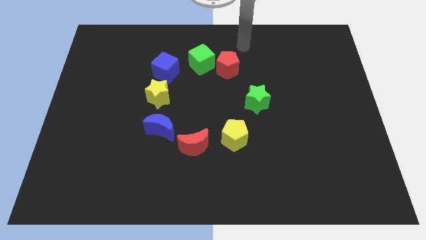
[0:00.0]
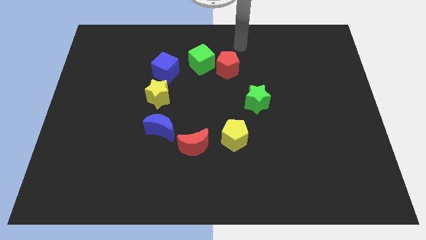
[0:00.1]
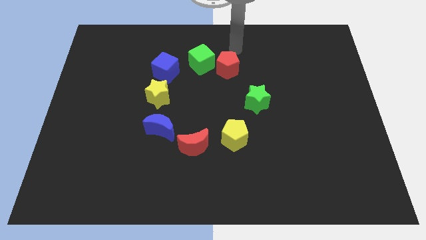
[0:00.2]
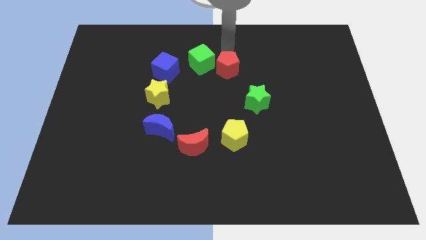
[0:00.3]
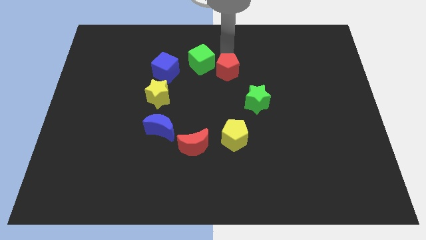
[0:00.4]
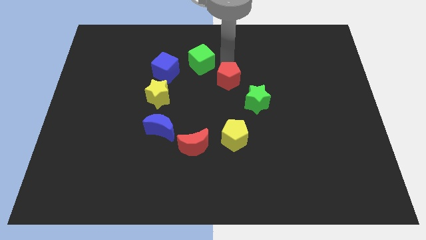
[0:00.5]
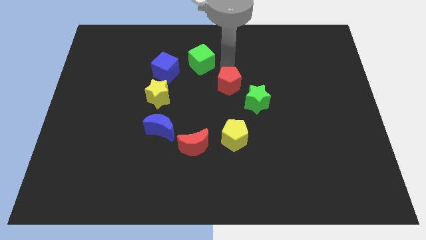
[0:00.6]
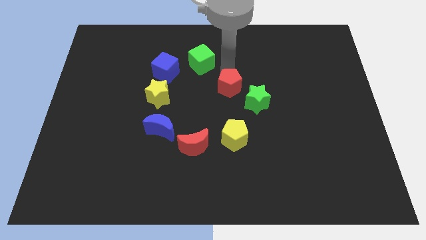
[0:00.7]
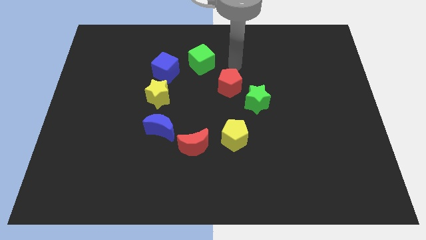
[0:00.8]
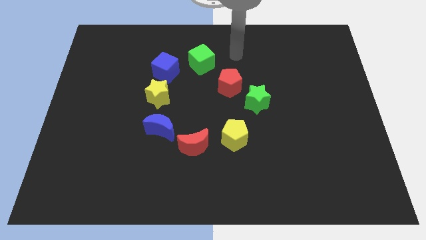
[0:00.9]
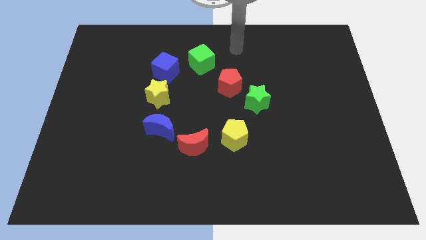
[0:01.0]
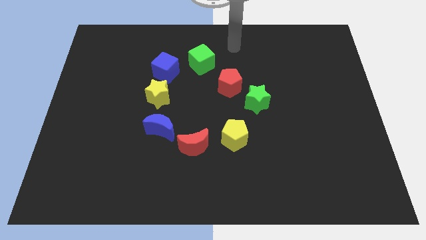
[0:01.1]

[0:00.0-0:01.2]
move the red pentagon towards the top left of the green star

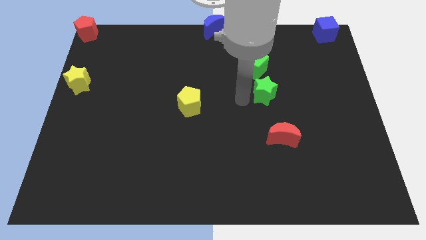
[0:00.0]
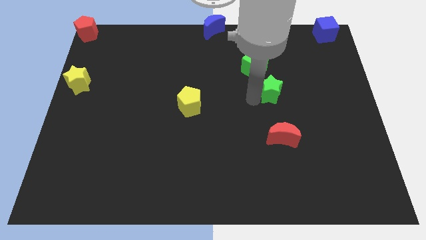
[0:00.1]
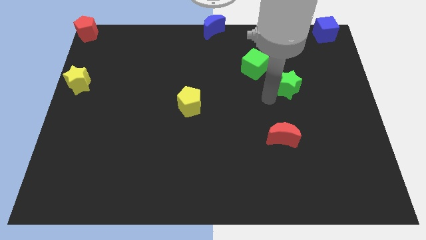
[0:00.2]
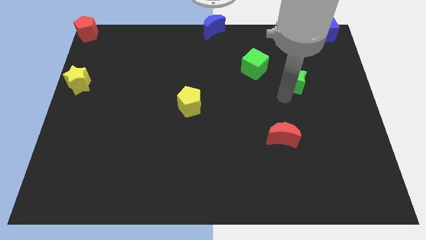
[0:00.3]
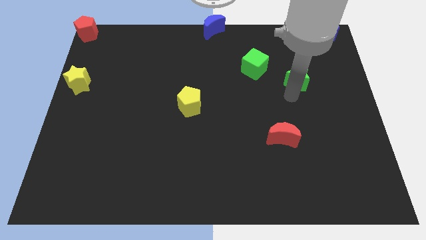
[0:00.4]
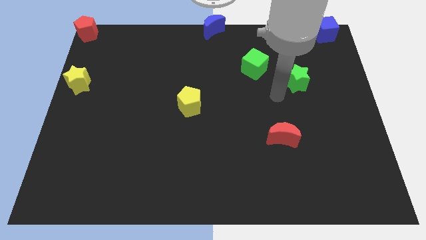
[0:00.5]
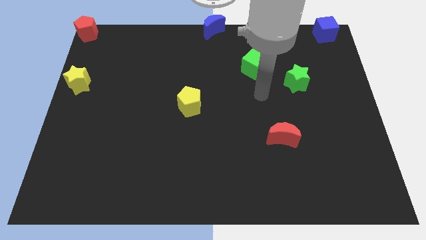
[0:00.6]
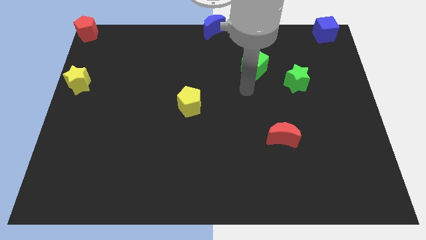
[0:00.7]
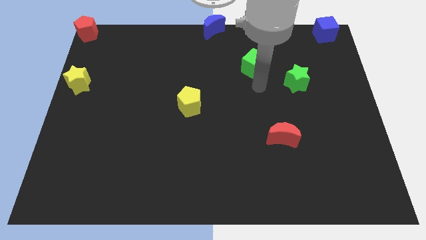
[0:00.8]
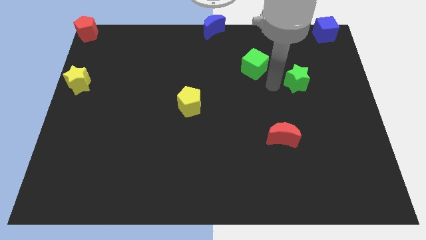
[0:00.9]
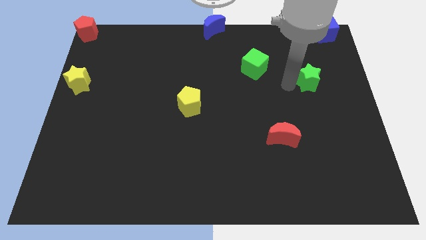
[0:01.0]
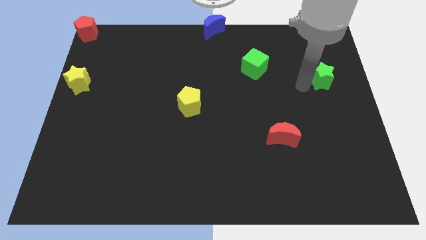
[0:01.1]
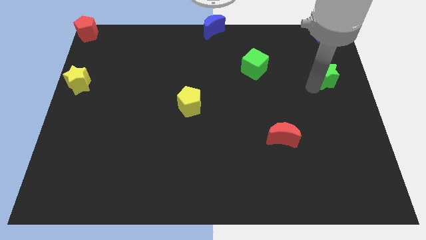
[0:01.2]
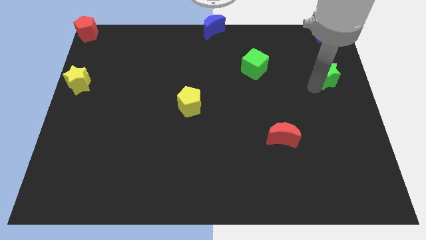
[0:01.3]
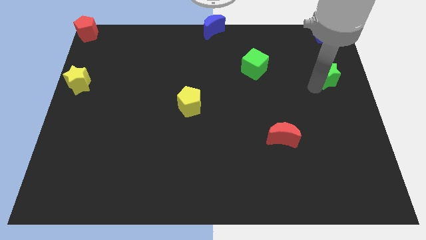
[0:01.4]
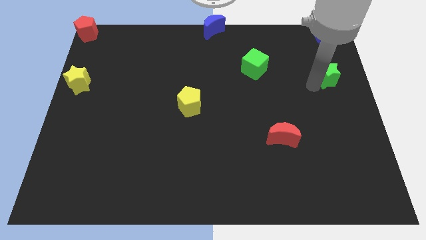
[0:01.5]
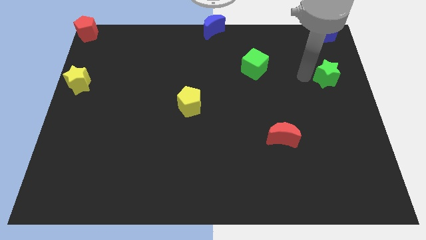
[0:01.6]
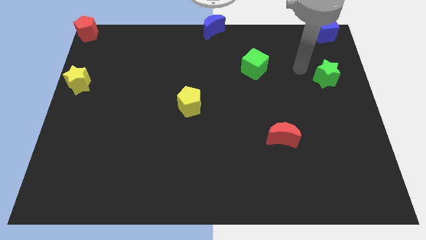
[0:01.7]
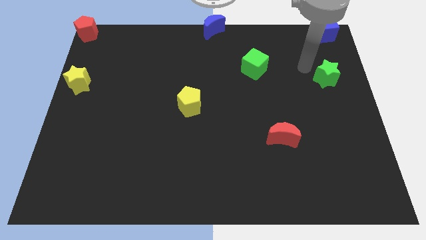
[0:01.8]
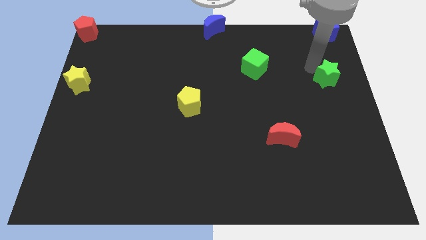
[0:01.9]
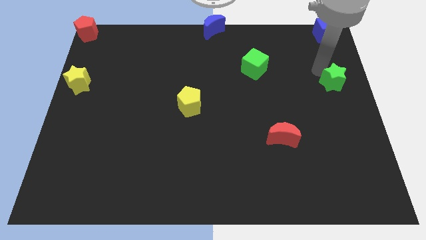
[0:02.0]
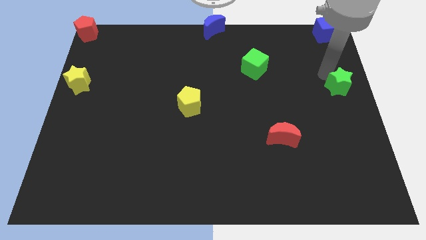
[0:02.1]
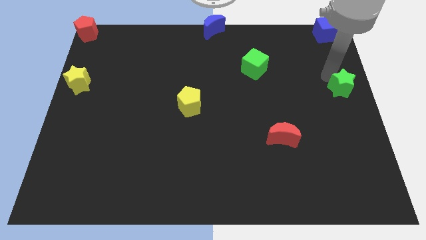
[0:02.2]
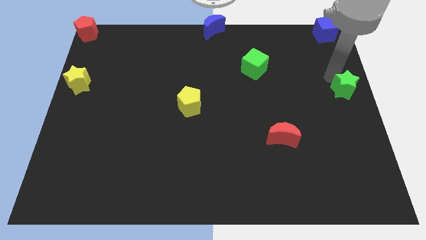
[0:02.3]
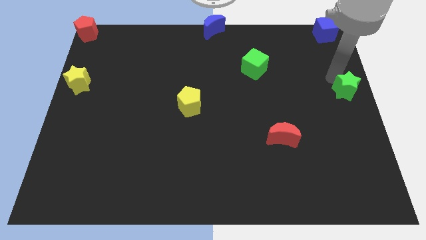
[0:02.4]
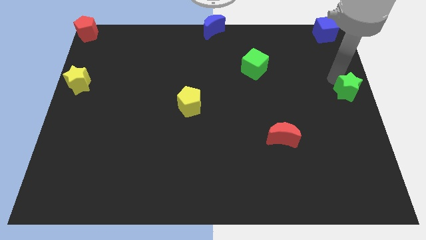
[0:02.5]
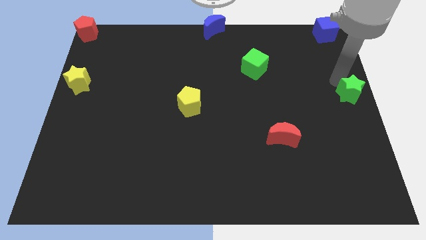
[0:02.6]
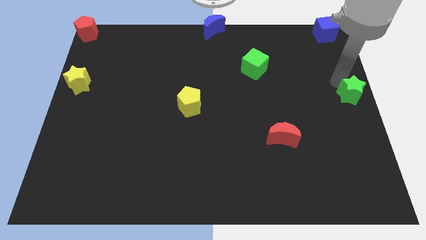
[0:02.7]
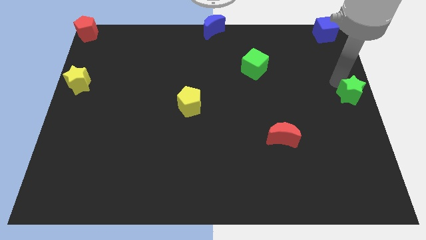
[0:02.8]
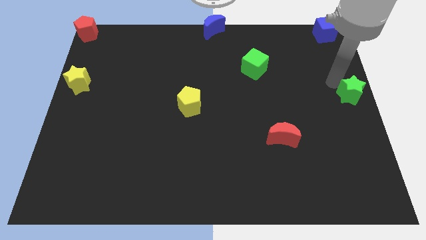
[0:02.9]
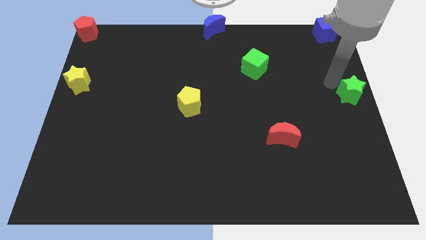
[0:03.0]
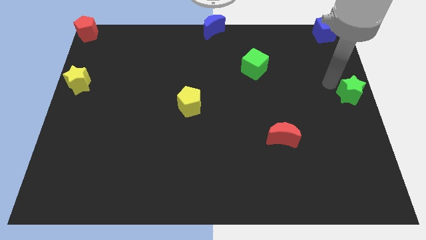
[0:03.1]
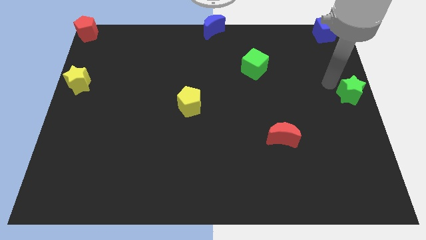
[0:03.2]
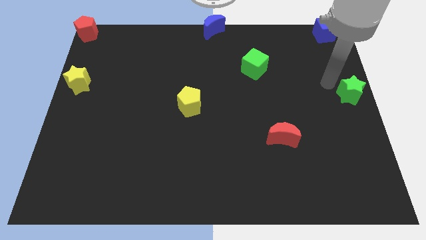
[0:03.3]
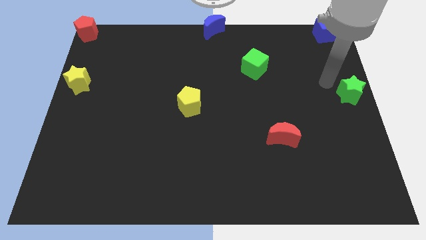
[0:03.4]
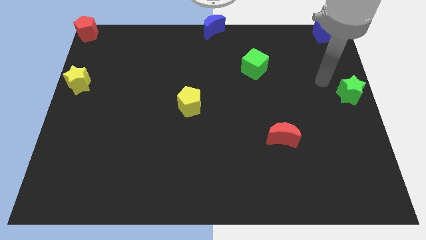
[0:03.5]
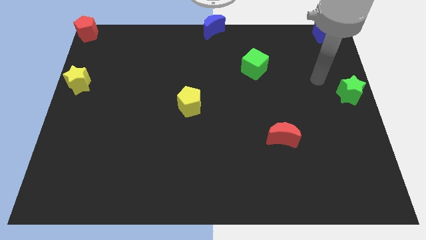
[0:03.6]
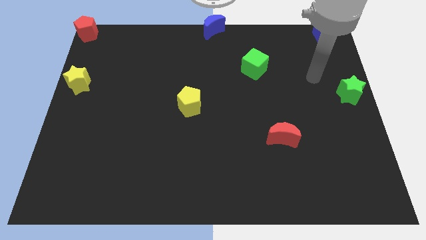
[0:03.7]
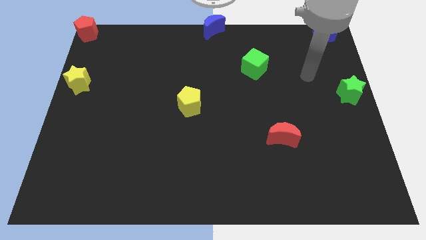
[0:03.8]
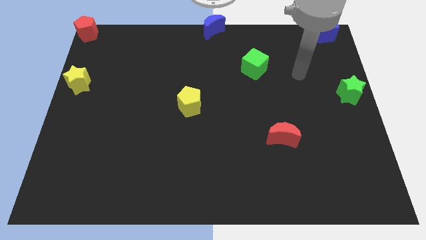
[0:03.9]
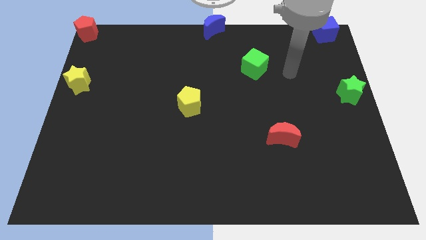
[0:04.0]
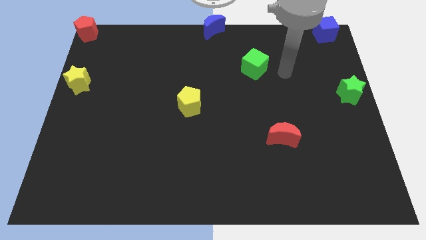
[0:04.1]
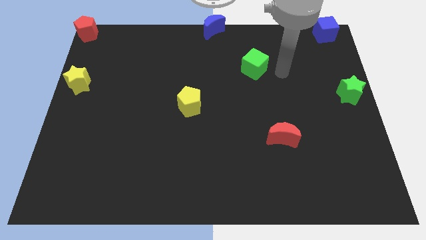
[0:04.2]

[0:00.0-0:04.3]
place the green star vertically below the blue cube

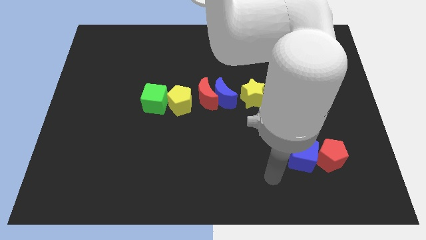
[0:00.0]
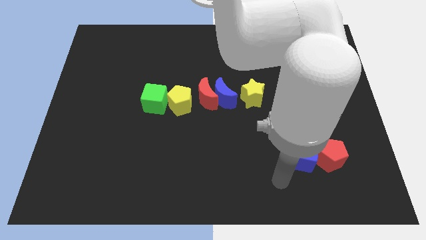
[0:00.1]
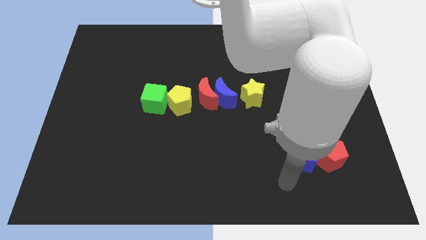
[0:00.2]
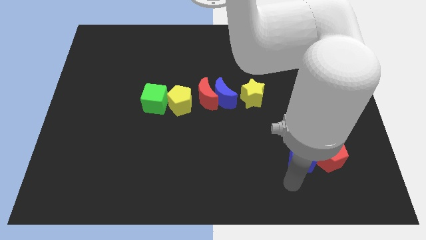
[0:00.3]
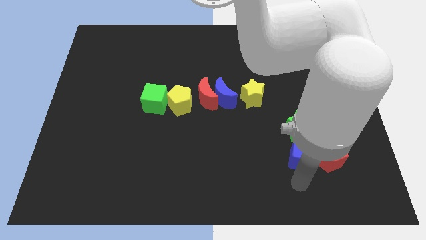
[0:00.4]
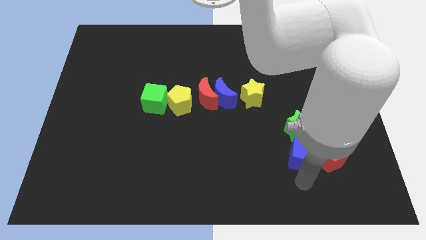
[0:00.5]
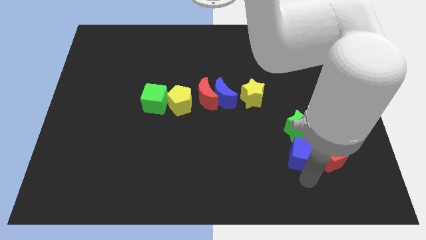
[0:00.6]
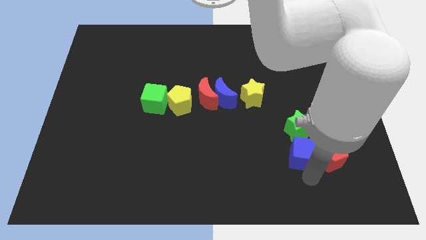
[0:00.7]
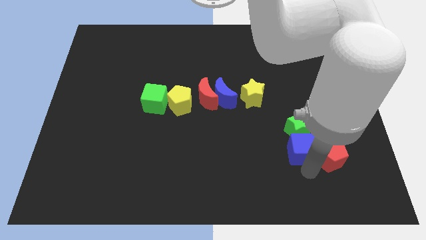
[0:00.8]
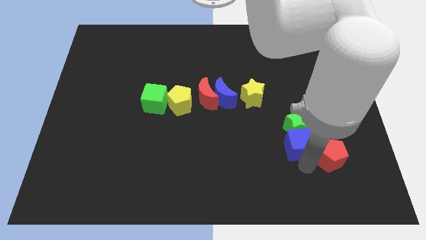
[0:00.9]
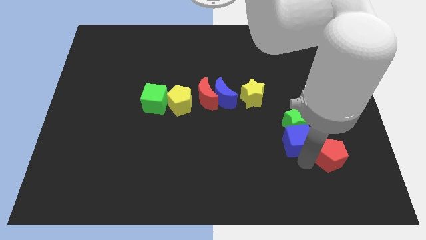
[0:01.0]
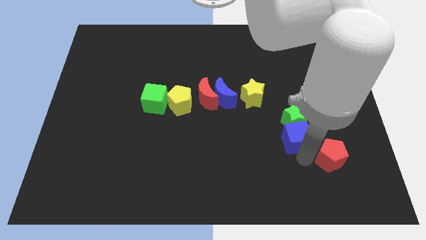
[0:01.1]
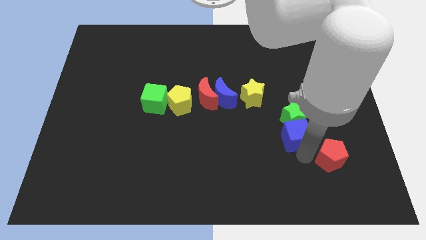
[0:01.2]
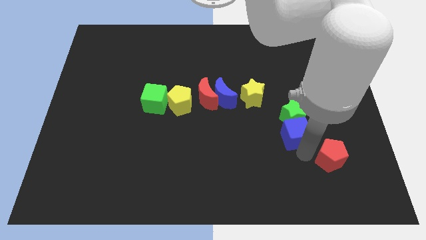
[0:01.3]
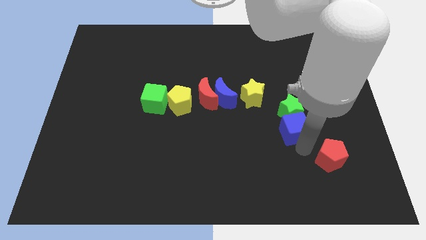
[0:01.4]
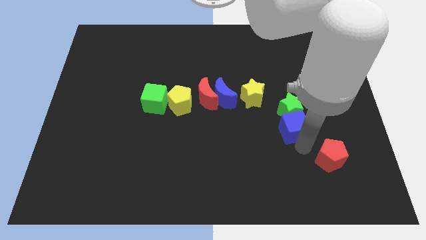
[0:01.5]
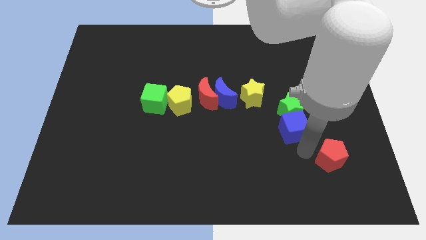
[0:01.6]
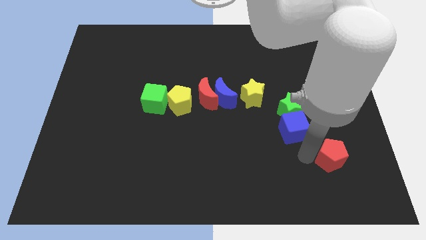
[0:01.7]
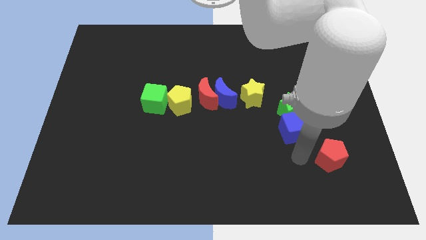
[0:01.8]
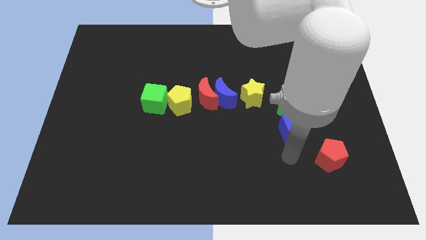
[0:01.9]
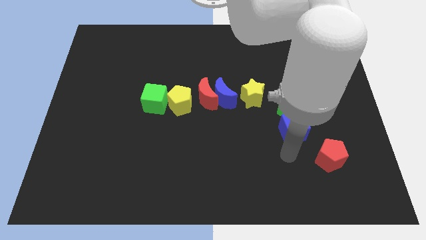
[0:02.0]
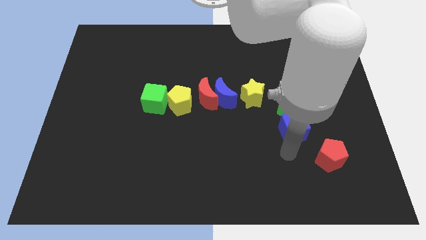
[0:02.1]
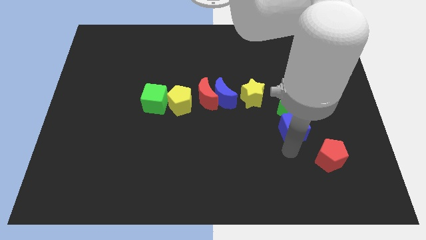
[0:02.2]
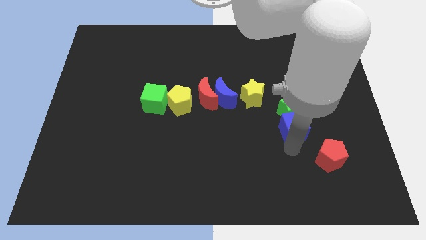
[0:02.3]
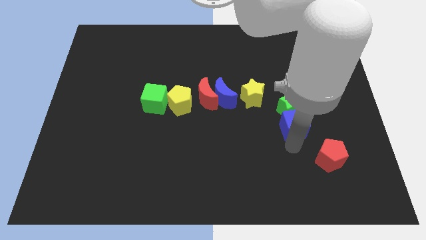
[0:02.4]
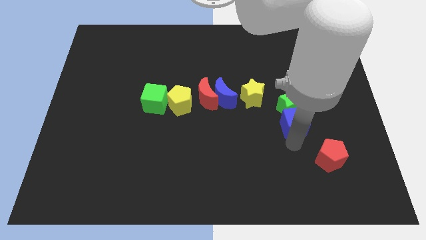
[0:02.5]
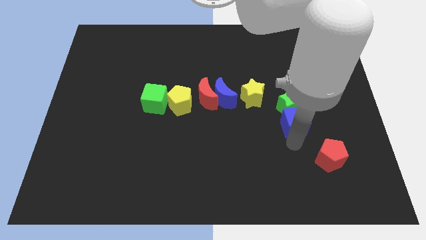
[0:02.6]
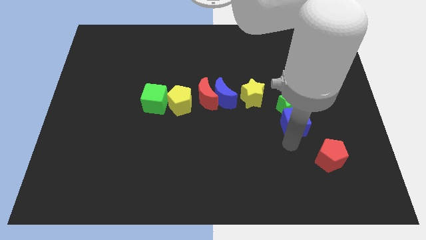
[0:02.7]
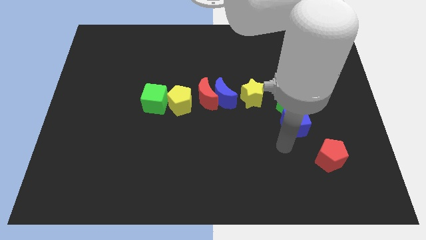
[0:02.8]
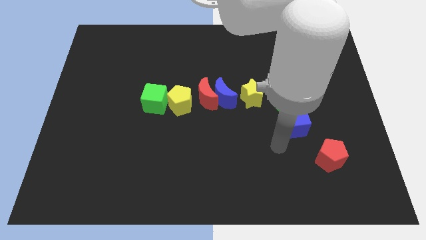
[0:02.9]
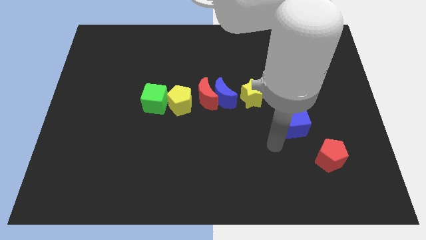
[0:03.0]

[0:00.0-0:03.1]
push blue cube and green star towards top

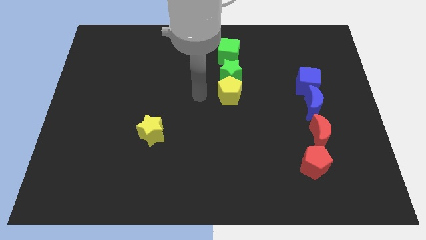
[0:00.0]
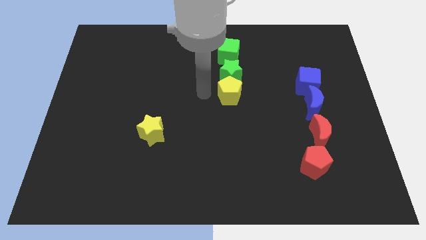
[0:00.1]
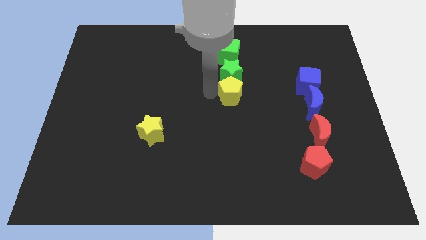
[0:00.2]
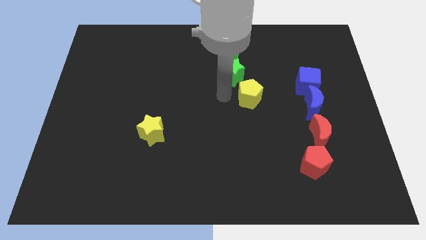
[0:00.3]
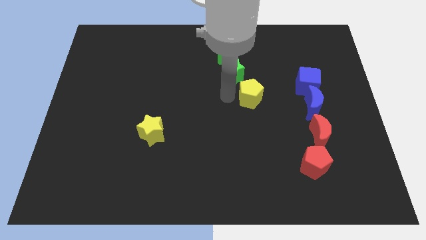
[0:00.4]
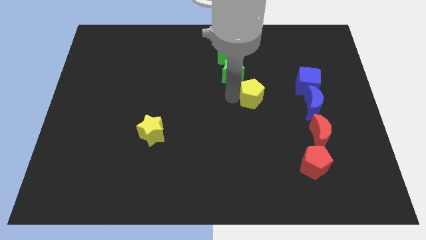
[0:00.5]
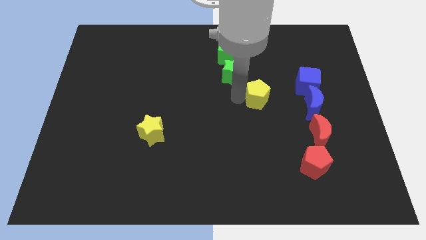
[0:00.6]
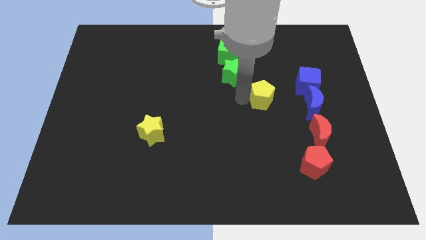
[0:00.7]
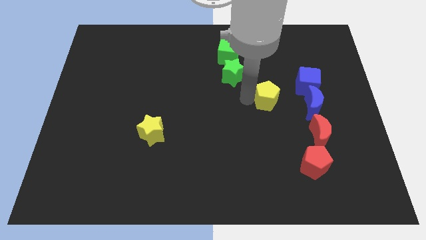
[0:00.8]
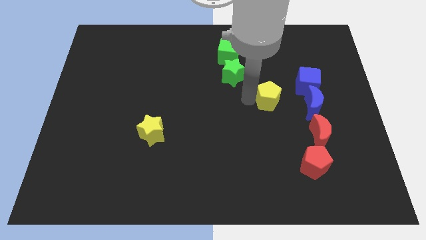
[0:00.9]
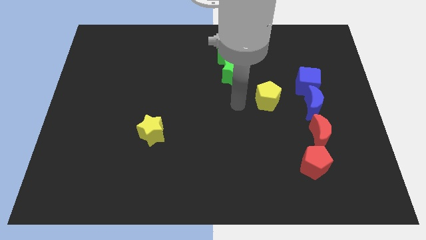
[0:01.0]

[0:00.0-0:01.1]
separate the yellow pentagon from the green star
